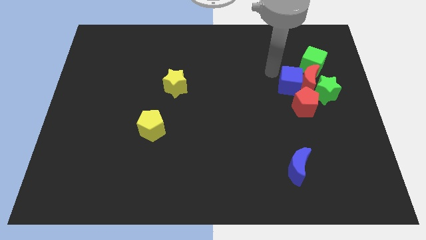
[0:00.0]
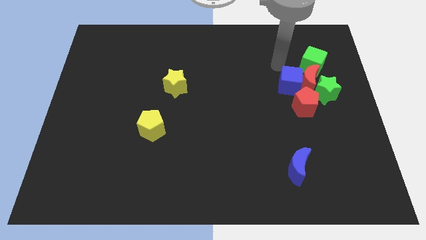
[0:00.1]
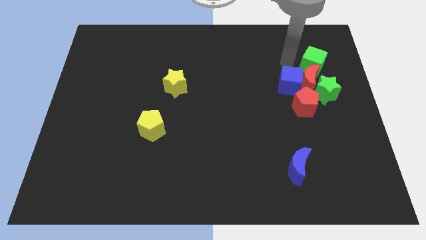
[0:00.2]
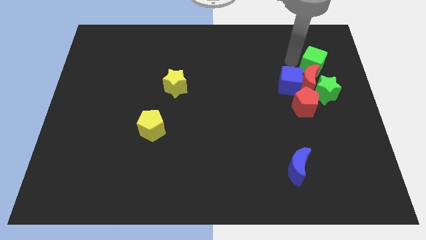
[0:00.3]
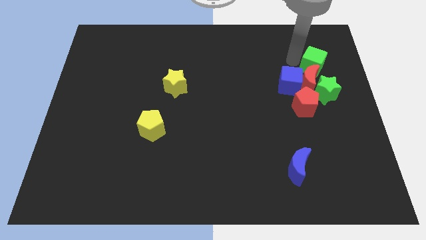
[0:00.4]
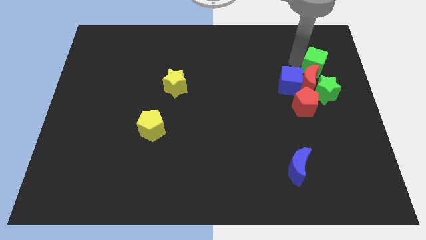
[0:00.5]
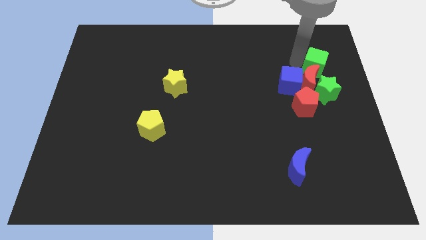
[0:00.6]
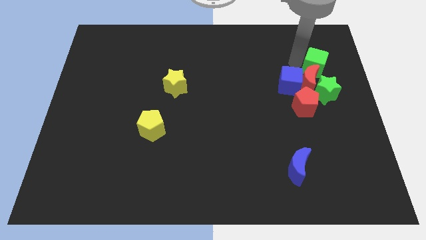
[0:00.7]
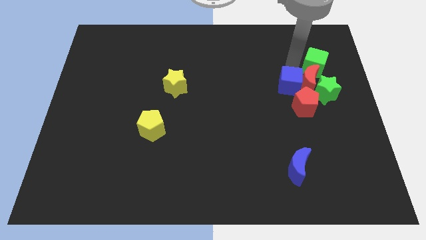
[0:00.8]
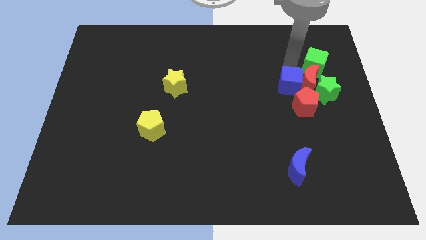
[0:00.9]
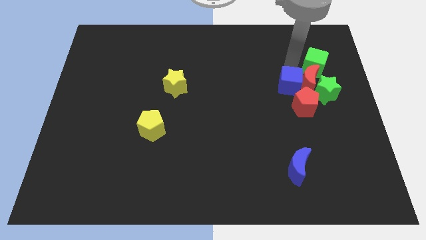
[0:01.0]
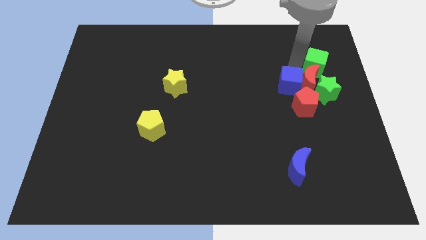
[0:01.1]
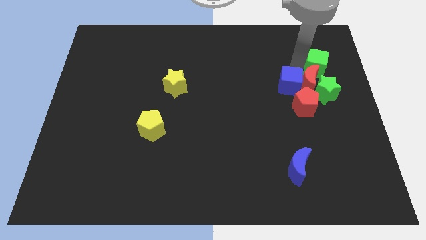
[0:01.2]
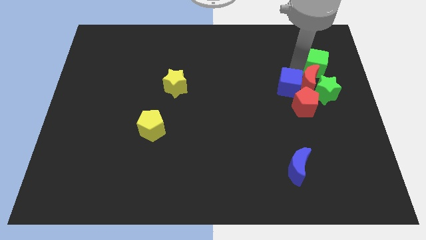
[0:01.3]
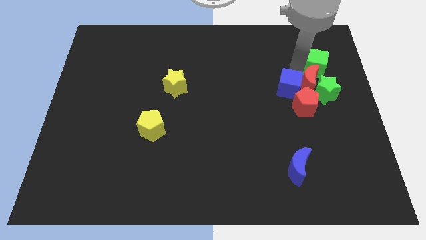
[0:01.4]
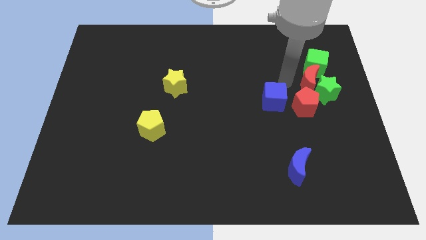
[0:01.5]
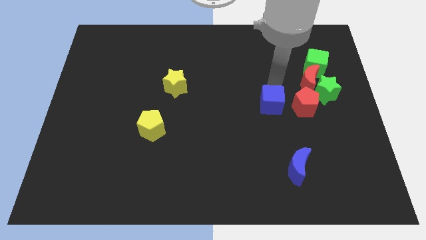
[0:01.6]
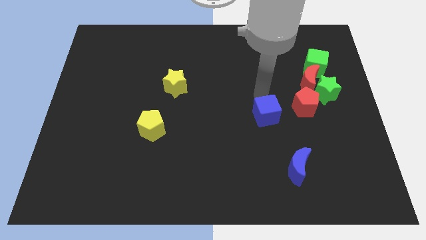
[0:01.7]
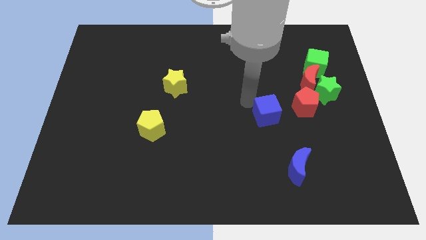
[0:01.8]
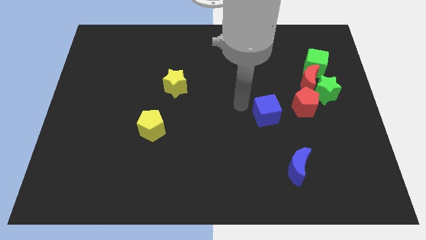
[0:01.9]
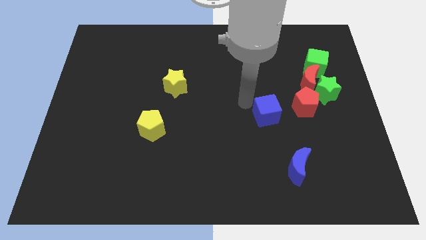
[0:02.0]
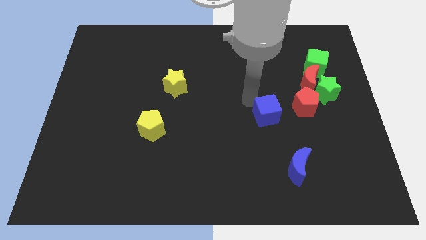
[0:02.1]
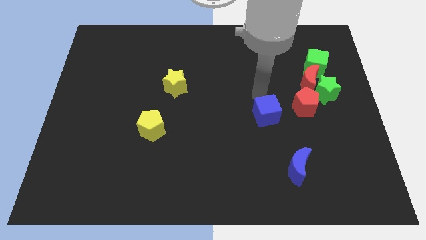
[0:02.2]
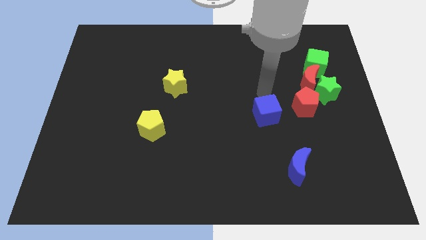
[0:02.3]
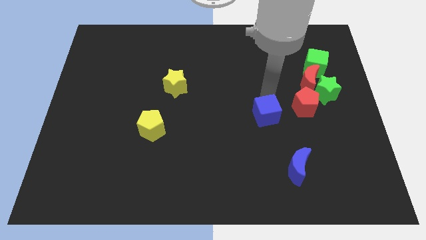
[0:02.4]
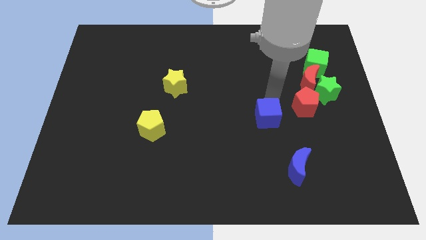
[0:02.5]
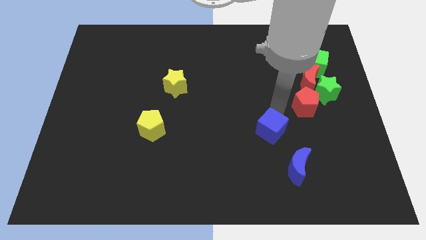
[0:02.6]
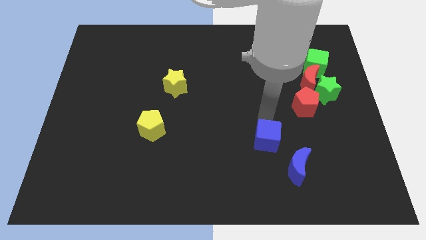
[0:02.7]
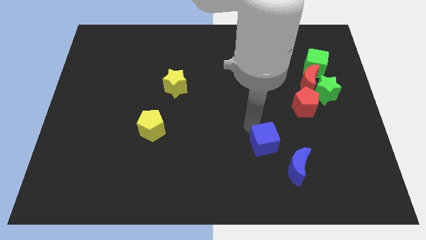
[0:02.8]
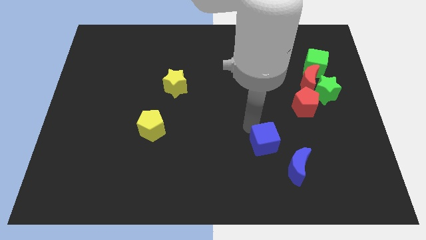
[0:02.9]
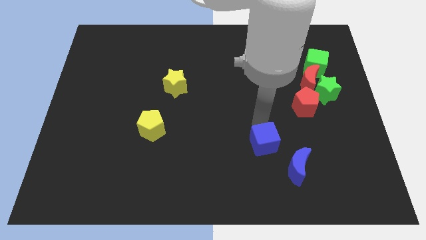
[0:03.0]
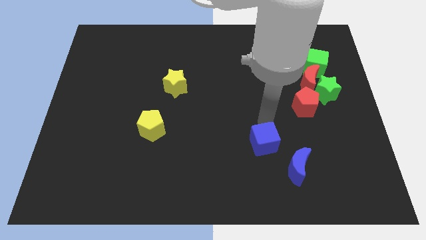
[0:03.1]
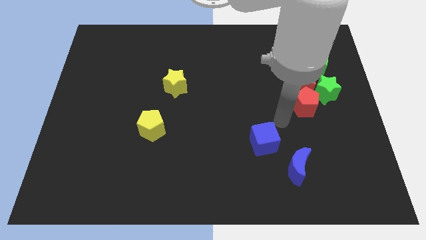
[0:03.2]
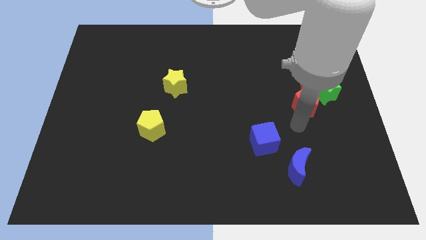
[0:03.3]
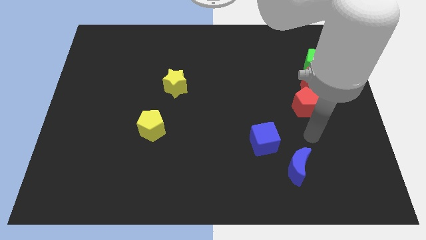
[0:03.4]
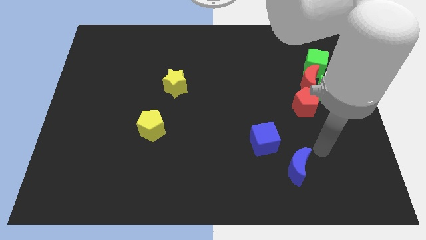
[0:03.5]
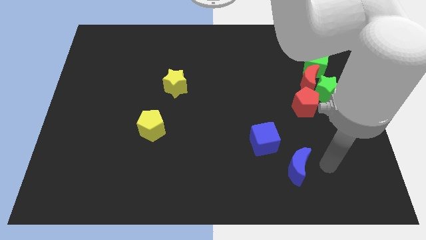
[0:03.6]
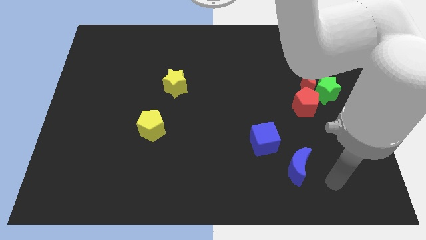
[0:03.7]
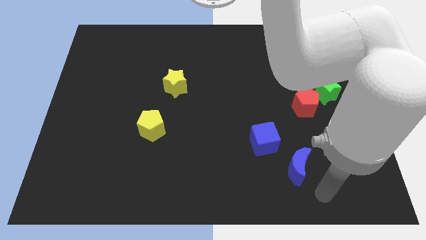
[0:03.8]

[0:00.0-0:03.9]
move the blue cube to the top left of the blue moon

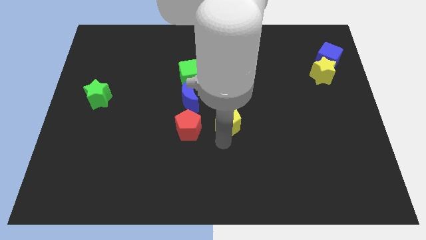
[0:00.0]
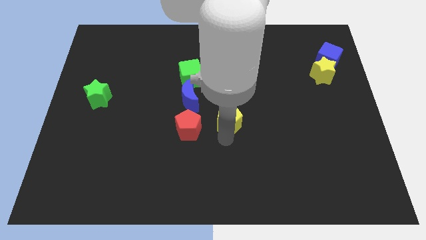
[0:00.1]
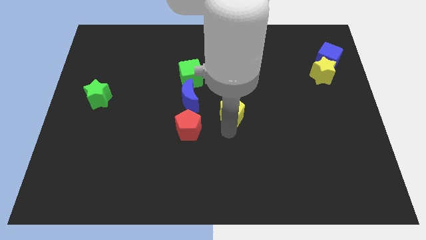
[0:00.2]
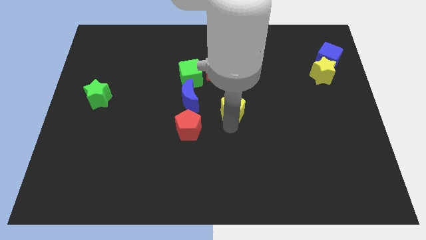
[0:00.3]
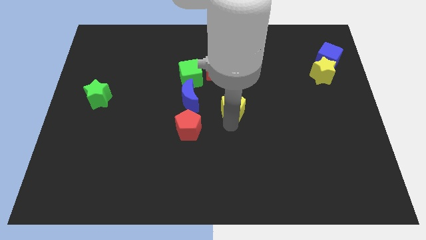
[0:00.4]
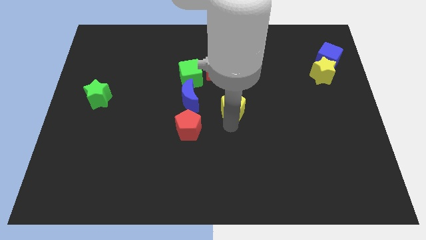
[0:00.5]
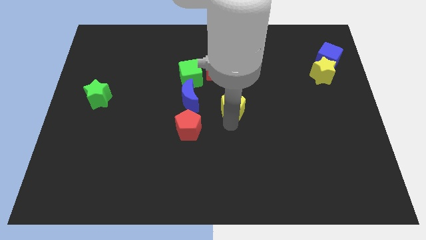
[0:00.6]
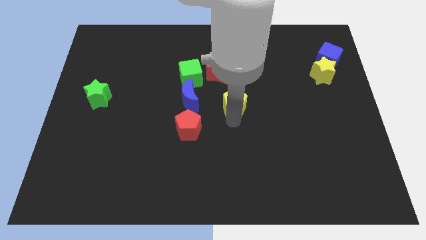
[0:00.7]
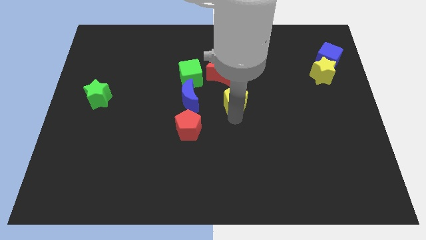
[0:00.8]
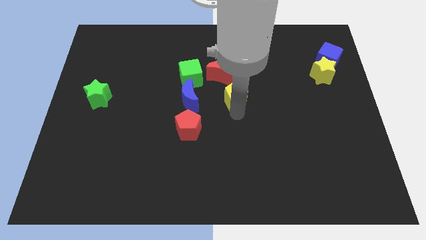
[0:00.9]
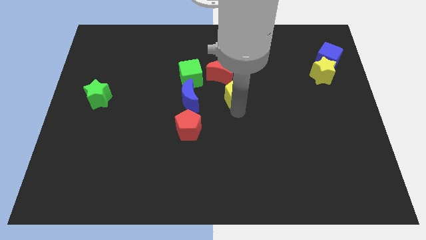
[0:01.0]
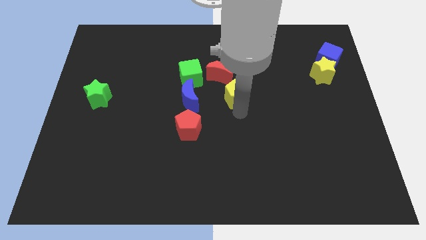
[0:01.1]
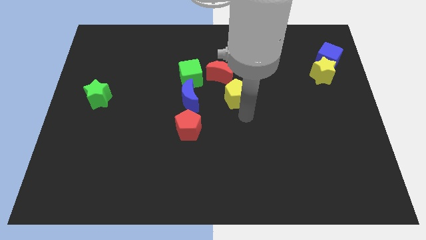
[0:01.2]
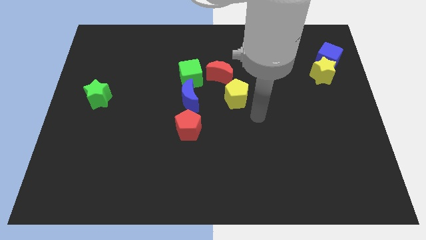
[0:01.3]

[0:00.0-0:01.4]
place yellow pentagon below the red crescent

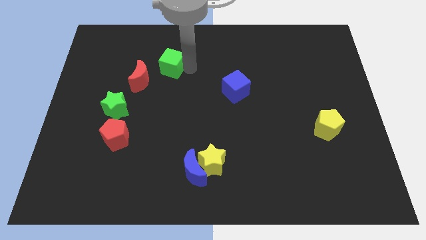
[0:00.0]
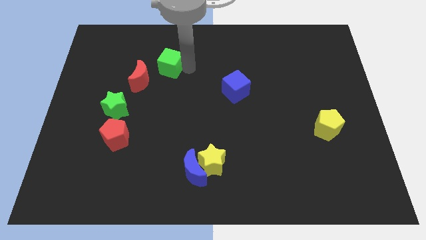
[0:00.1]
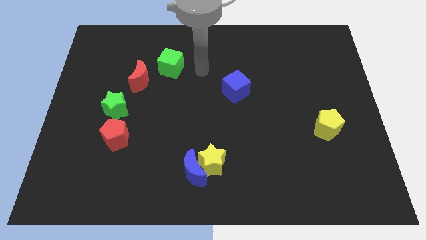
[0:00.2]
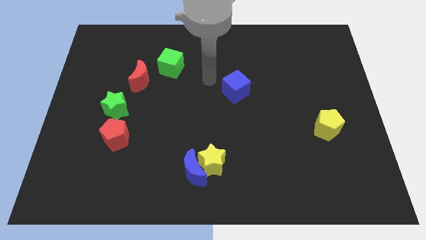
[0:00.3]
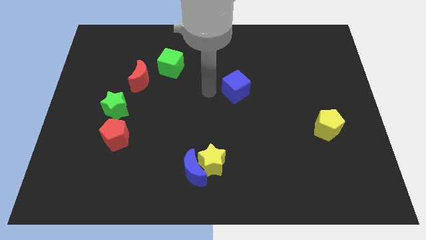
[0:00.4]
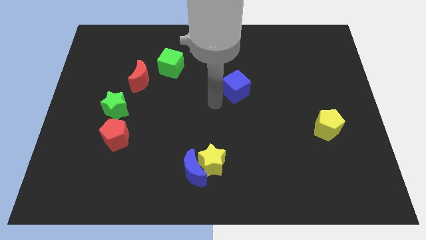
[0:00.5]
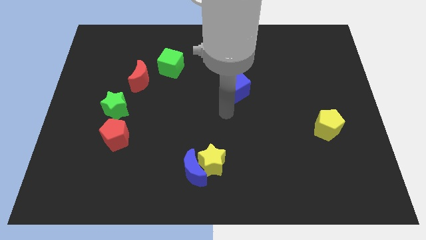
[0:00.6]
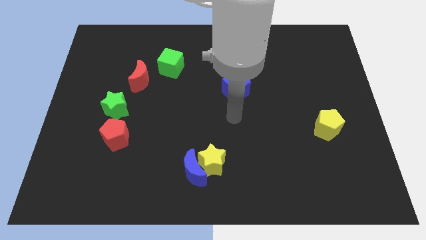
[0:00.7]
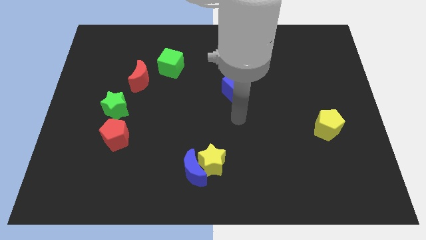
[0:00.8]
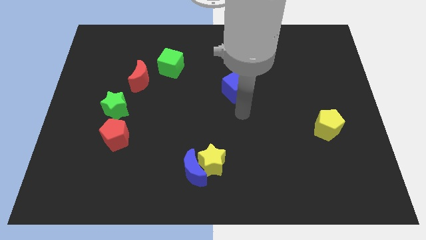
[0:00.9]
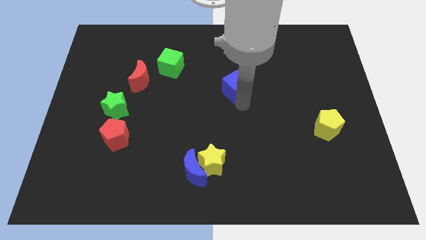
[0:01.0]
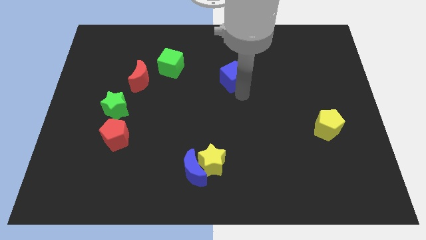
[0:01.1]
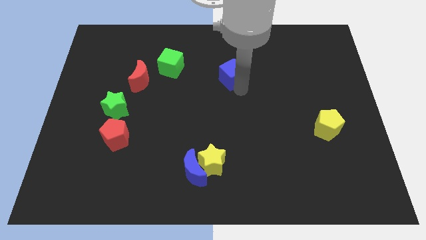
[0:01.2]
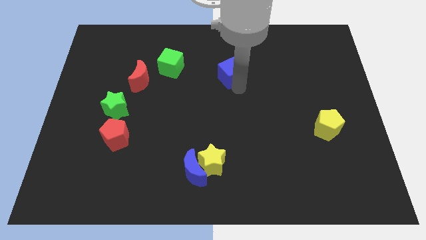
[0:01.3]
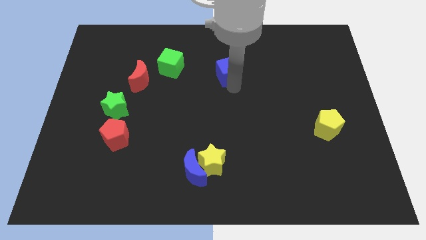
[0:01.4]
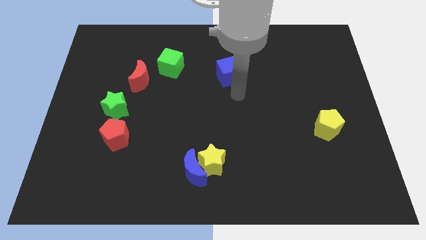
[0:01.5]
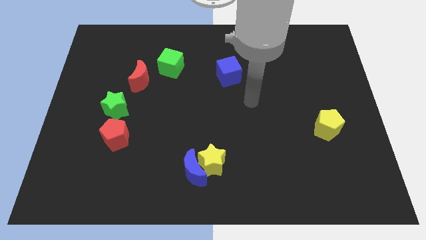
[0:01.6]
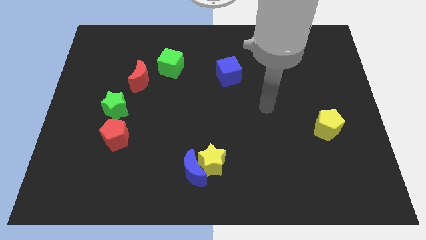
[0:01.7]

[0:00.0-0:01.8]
move the blue cube to the right of green cube

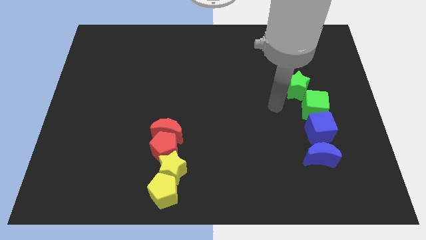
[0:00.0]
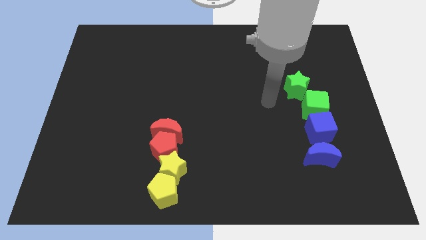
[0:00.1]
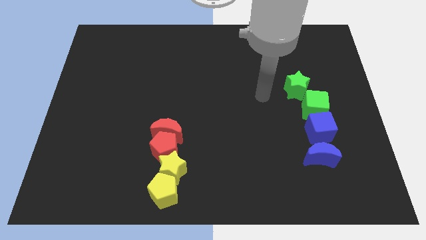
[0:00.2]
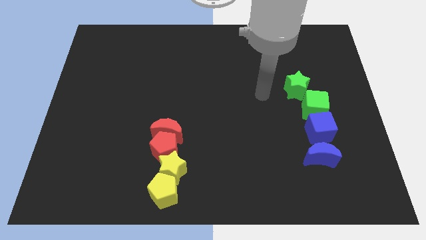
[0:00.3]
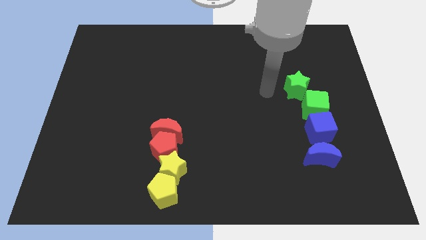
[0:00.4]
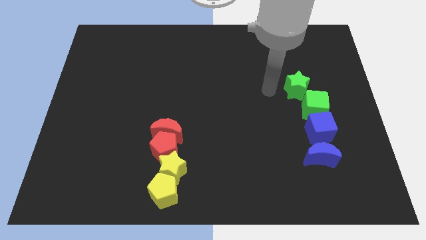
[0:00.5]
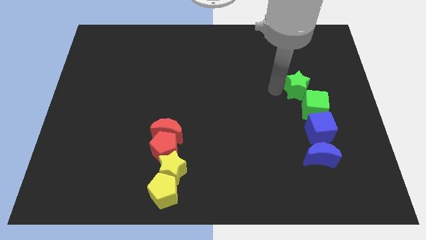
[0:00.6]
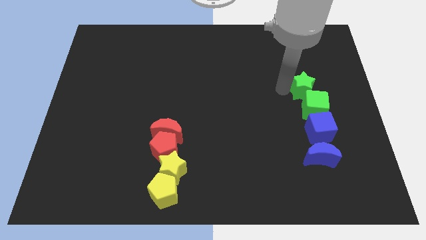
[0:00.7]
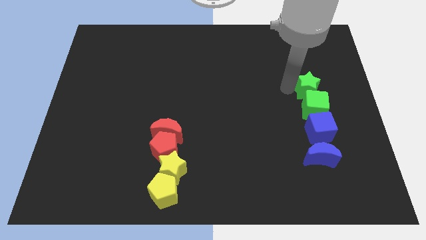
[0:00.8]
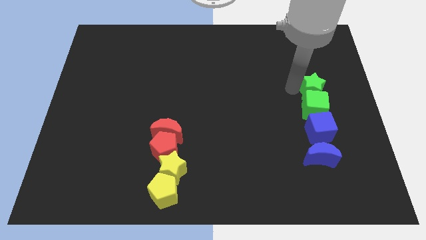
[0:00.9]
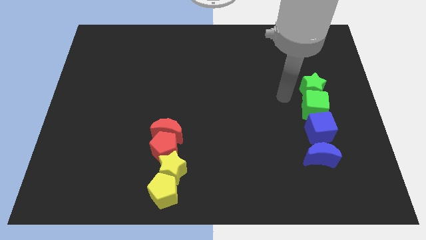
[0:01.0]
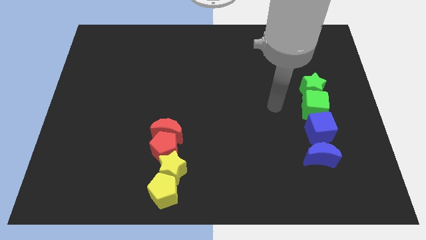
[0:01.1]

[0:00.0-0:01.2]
push the green star above to the green cube

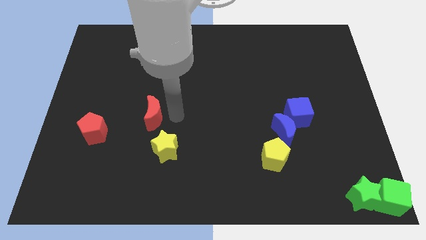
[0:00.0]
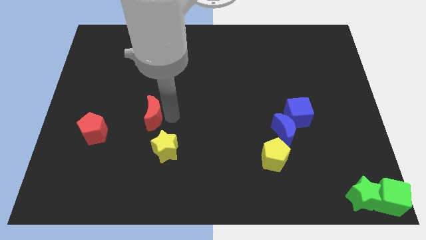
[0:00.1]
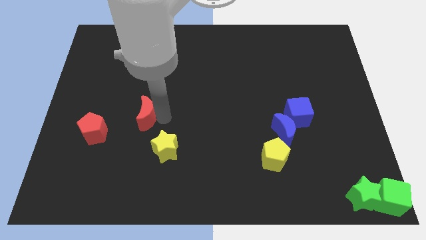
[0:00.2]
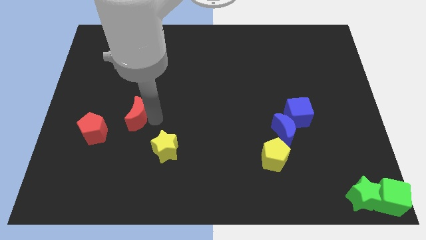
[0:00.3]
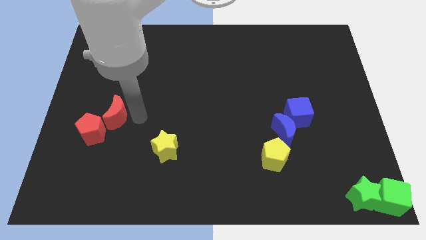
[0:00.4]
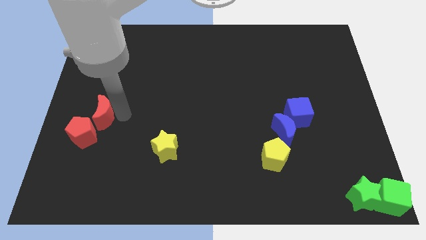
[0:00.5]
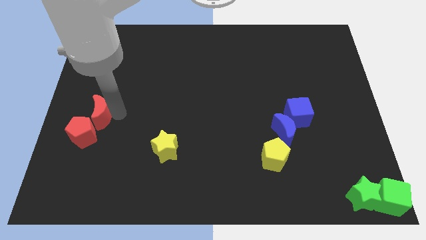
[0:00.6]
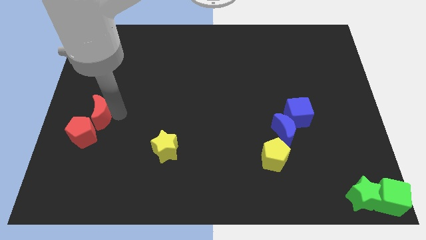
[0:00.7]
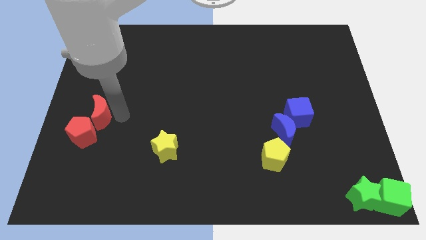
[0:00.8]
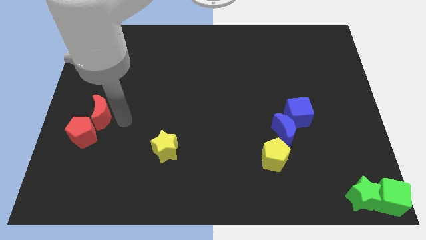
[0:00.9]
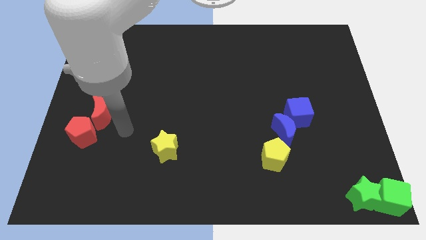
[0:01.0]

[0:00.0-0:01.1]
push red crescent towards the top of the red pentagon
